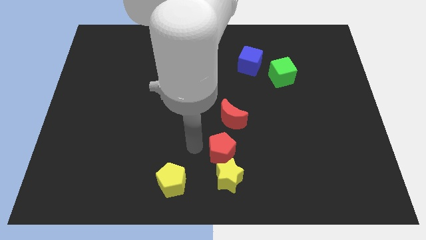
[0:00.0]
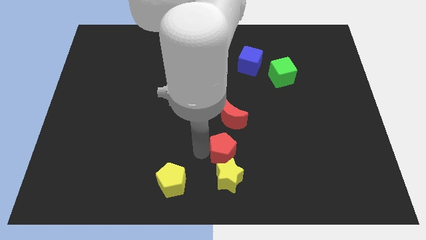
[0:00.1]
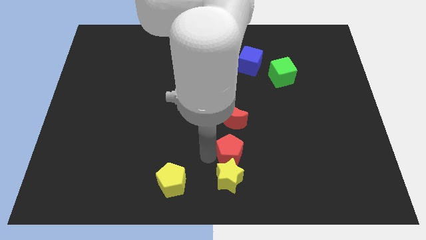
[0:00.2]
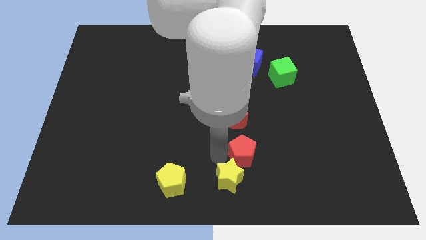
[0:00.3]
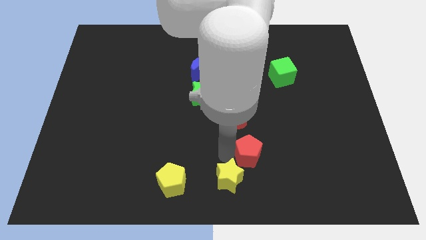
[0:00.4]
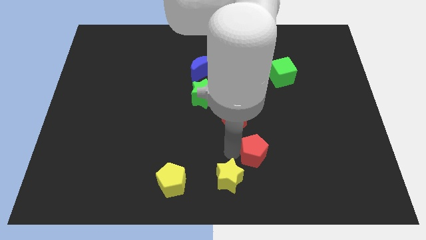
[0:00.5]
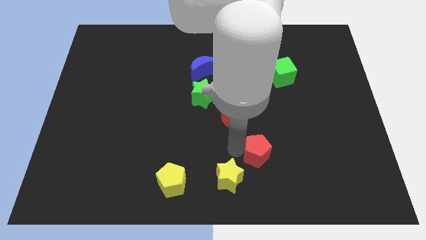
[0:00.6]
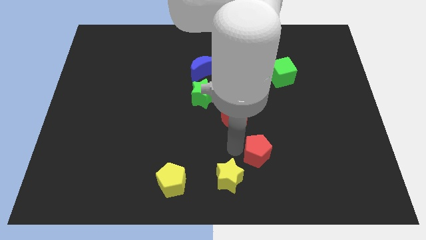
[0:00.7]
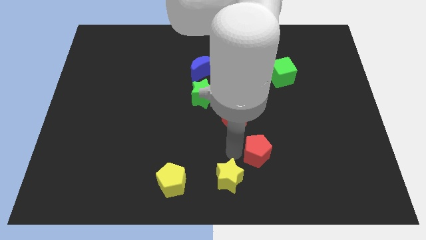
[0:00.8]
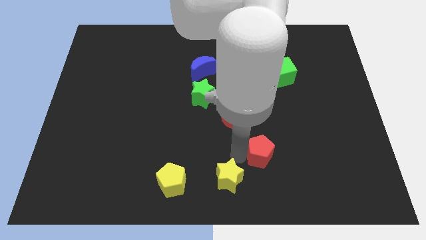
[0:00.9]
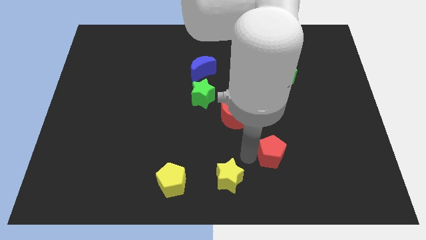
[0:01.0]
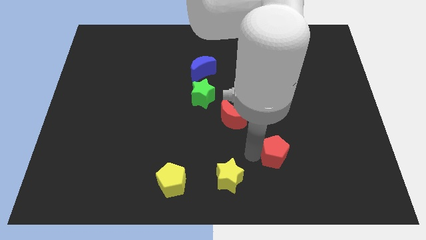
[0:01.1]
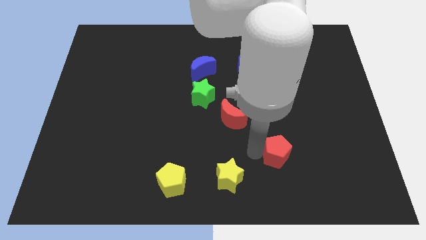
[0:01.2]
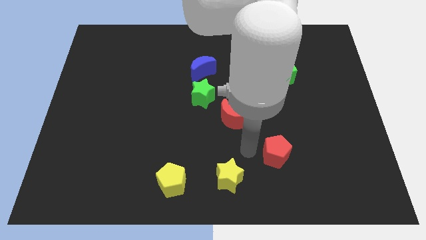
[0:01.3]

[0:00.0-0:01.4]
slightly push the red pentagon to the right

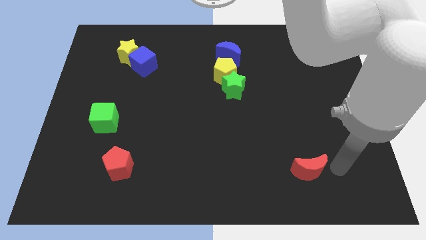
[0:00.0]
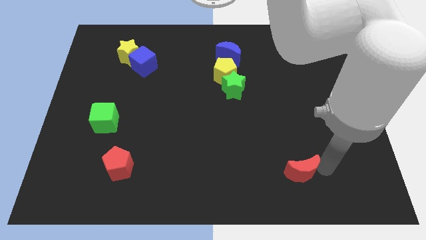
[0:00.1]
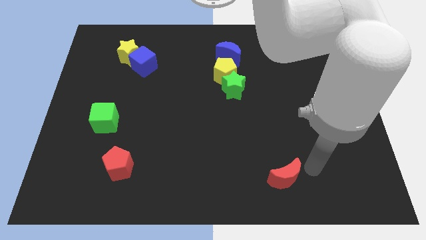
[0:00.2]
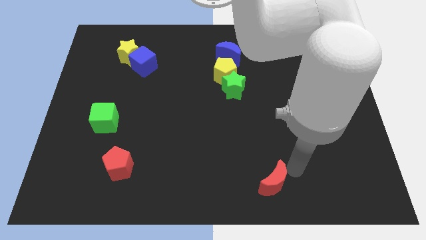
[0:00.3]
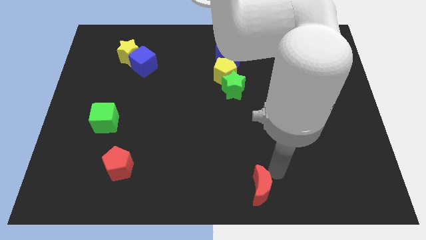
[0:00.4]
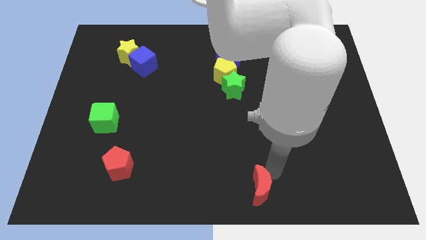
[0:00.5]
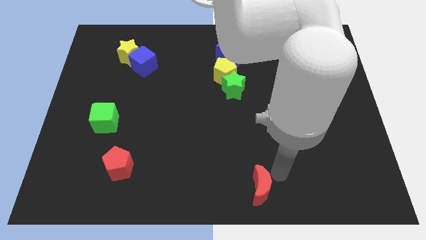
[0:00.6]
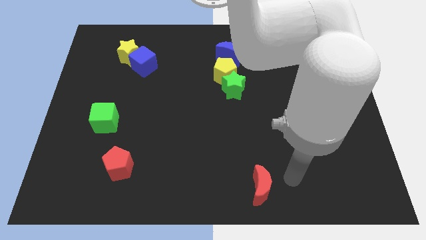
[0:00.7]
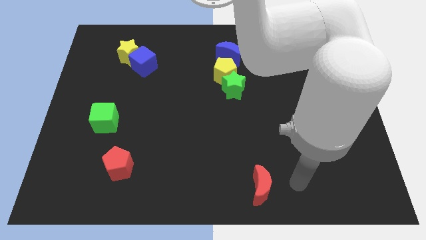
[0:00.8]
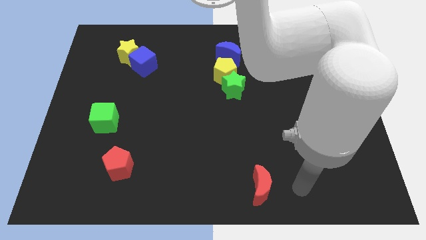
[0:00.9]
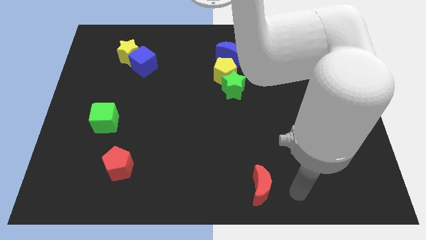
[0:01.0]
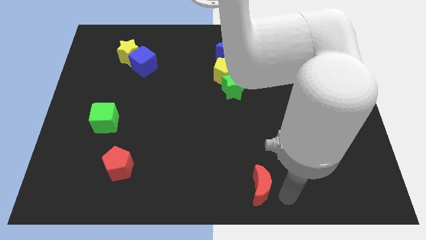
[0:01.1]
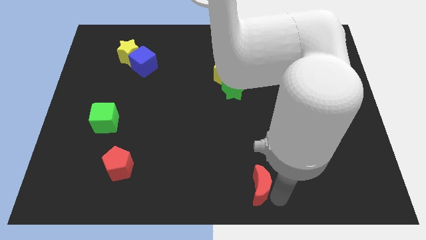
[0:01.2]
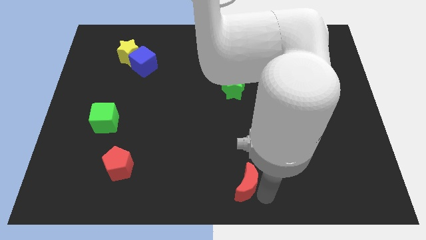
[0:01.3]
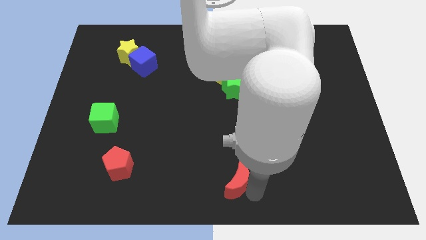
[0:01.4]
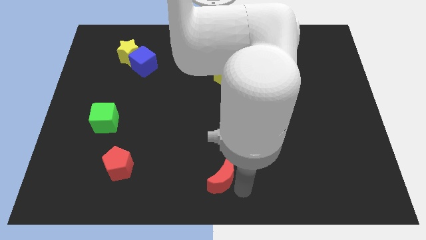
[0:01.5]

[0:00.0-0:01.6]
place the red moon at the bottom center of the board

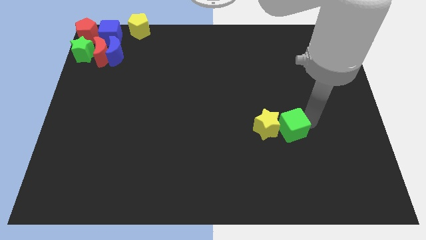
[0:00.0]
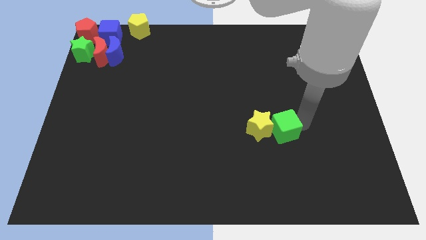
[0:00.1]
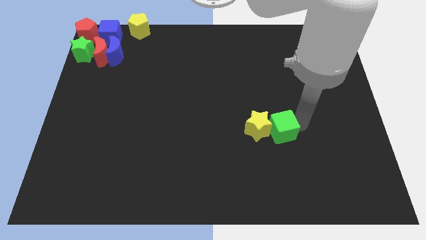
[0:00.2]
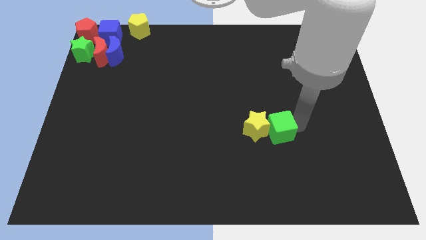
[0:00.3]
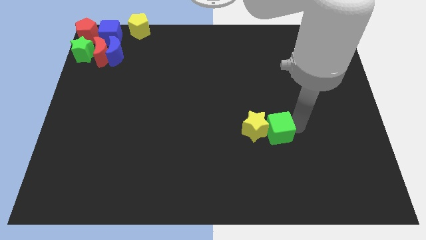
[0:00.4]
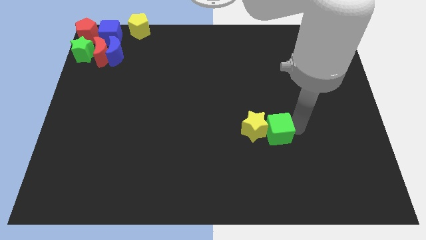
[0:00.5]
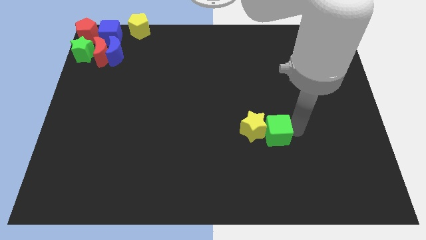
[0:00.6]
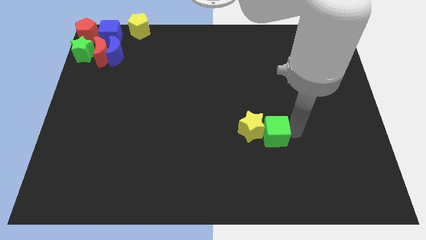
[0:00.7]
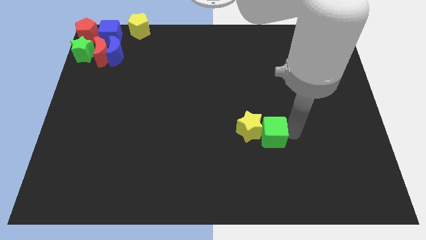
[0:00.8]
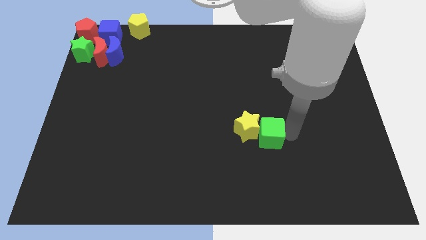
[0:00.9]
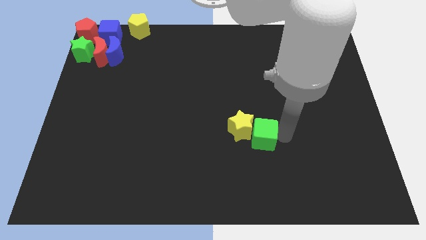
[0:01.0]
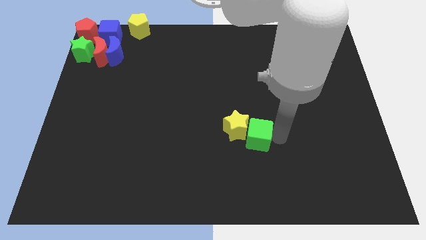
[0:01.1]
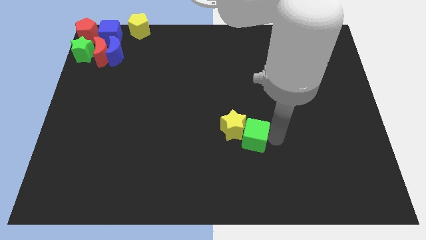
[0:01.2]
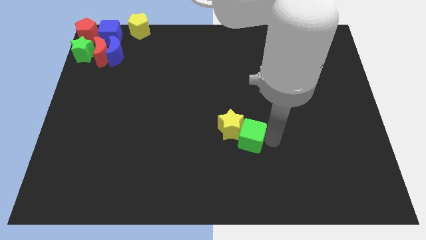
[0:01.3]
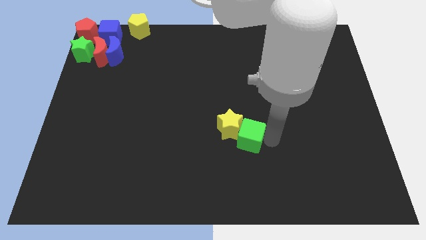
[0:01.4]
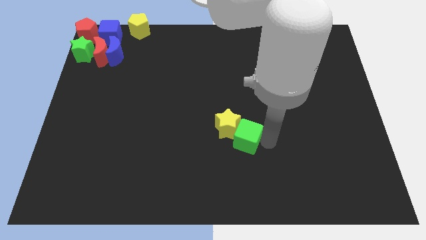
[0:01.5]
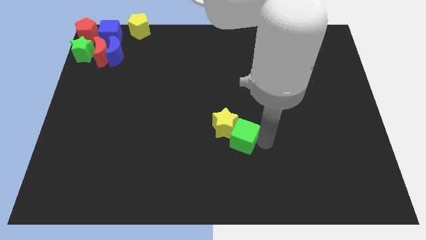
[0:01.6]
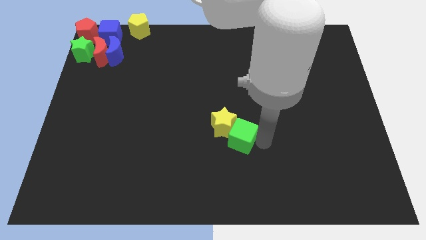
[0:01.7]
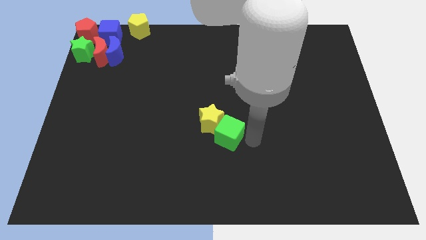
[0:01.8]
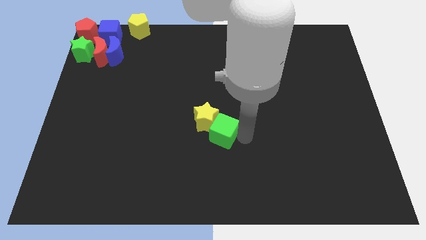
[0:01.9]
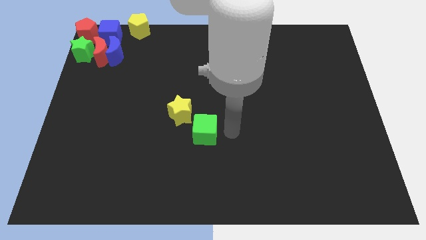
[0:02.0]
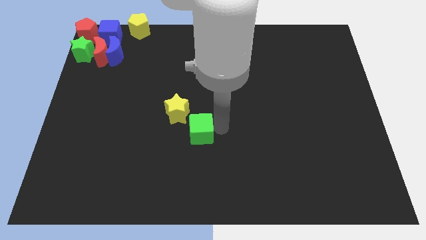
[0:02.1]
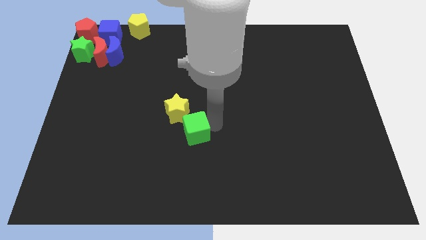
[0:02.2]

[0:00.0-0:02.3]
push the yellow star with the green cube

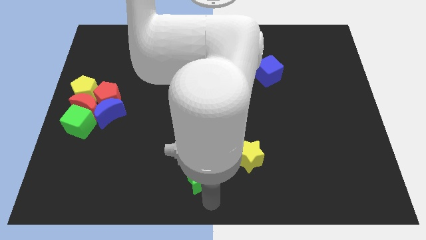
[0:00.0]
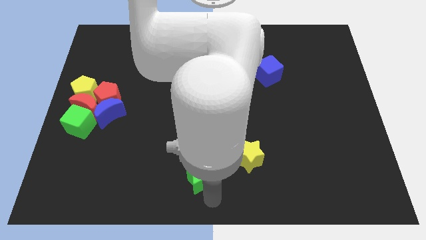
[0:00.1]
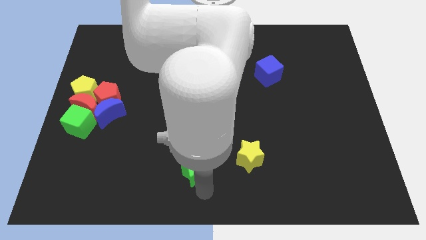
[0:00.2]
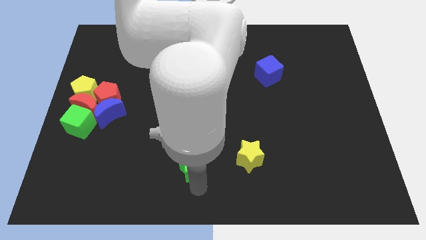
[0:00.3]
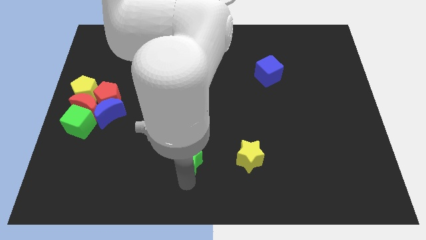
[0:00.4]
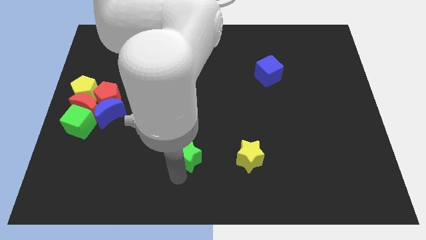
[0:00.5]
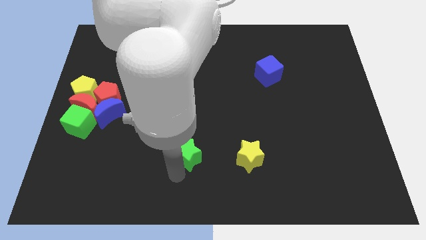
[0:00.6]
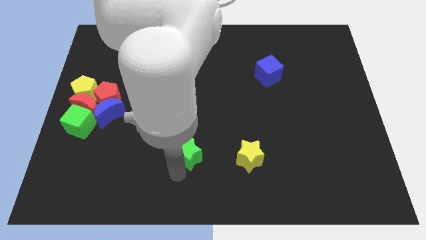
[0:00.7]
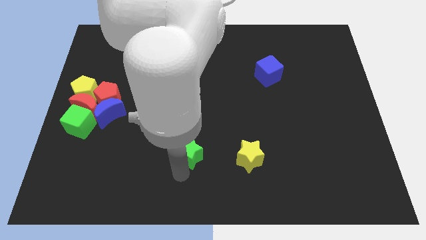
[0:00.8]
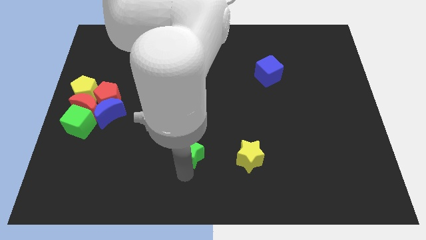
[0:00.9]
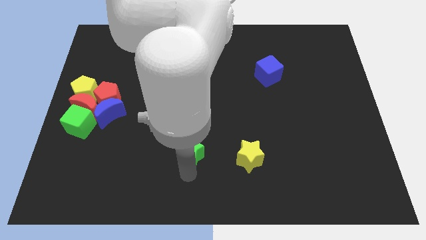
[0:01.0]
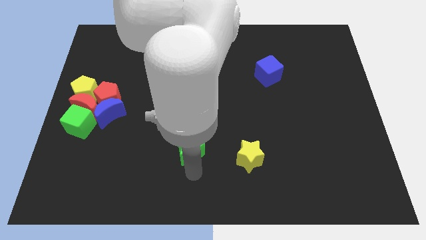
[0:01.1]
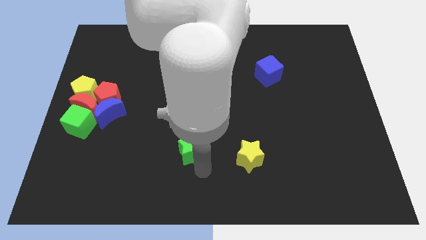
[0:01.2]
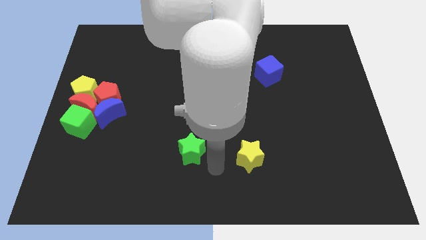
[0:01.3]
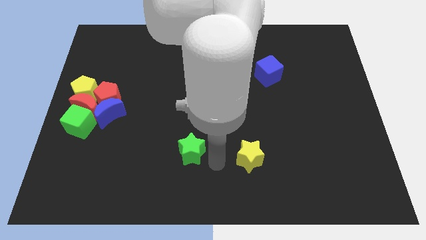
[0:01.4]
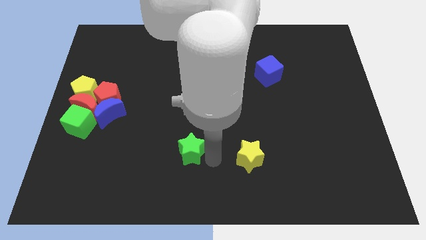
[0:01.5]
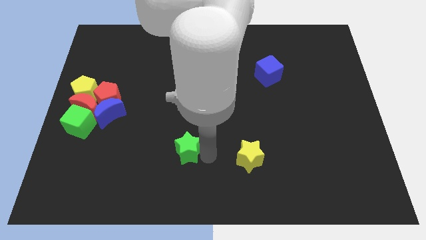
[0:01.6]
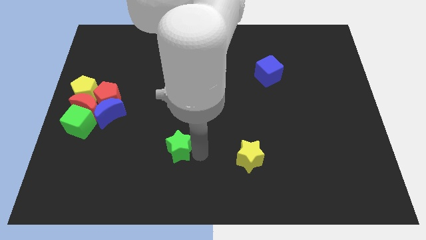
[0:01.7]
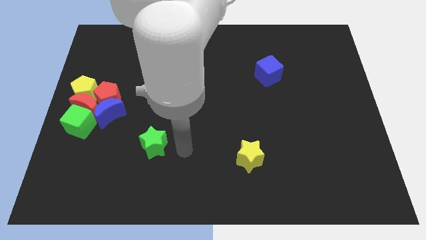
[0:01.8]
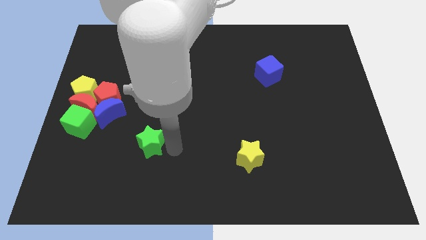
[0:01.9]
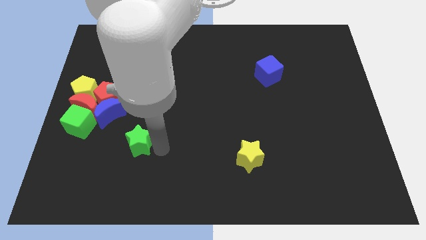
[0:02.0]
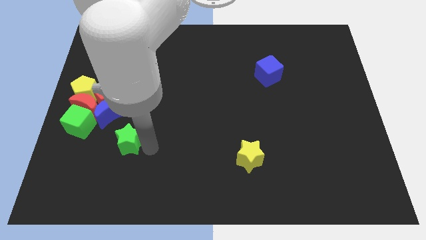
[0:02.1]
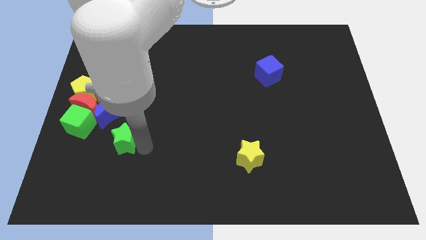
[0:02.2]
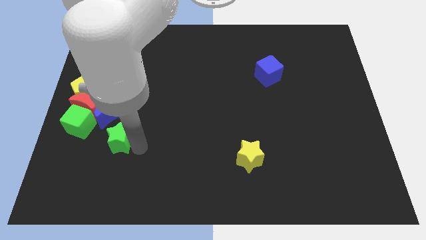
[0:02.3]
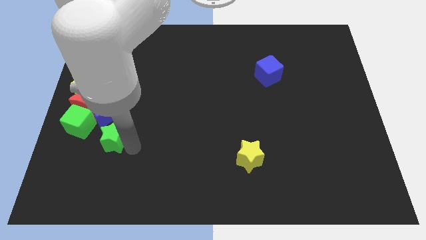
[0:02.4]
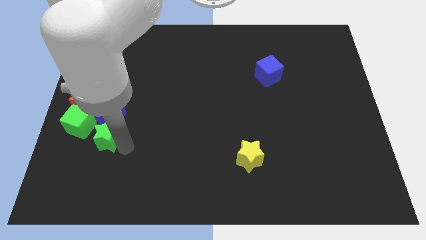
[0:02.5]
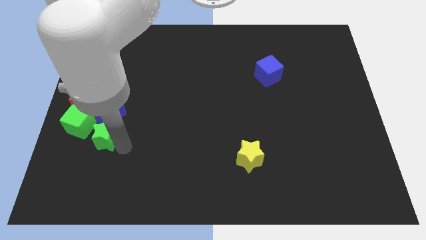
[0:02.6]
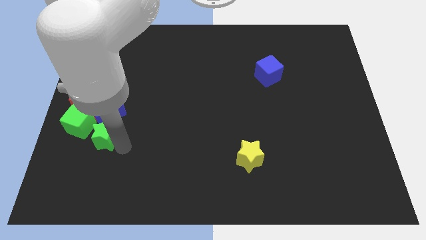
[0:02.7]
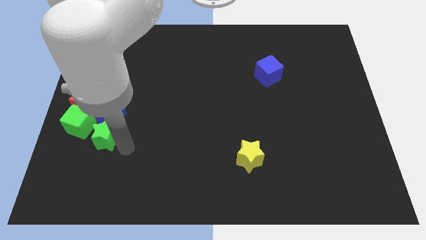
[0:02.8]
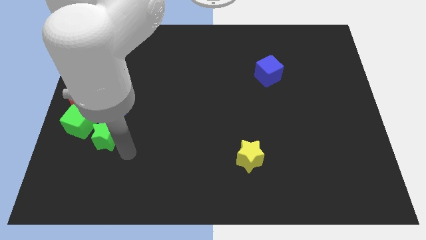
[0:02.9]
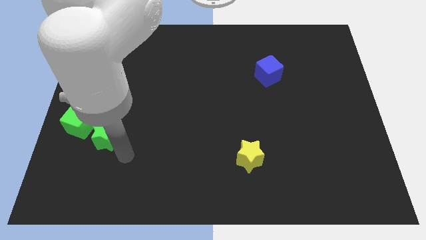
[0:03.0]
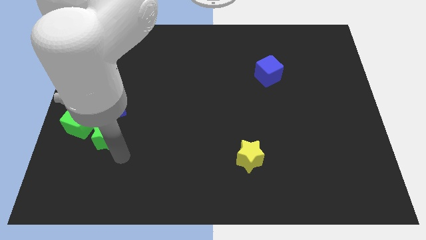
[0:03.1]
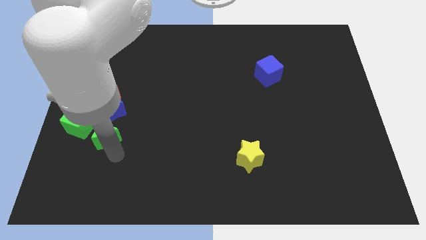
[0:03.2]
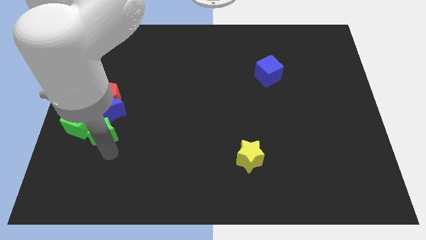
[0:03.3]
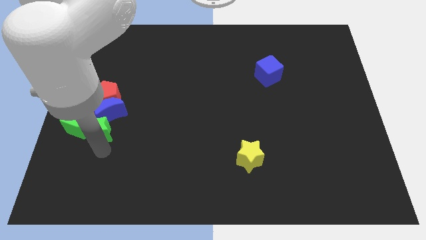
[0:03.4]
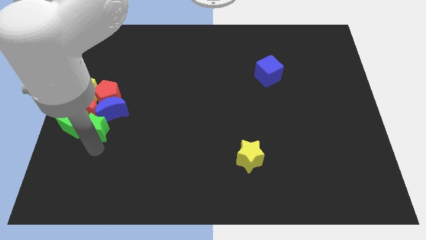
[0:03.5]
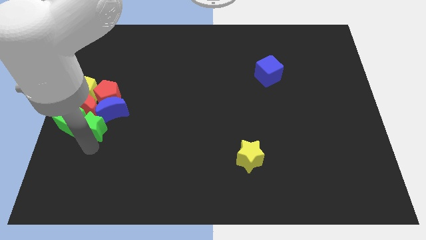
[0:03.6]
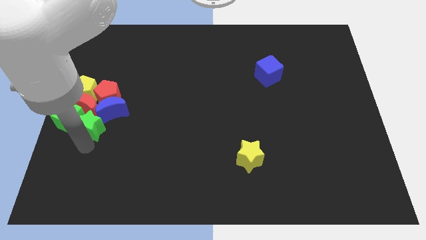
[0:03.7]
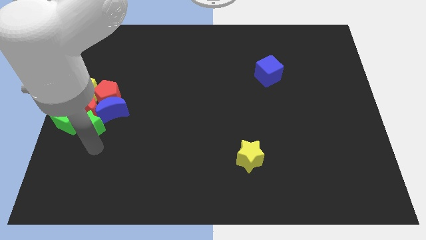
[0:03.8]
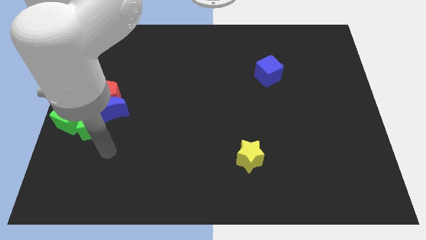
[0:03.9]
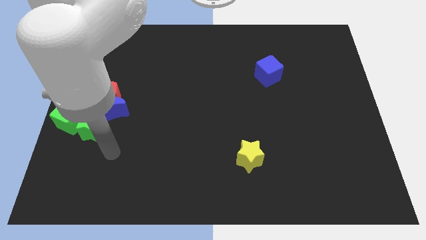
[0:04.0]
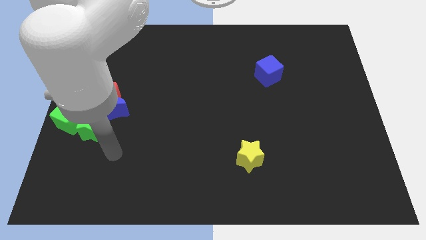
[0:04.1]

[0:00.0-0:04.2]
move the green star to the group of blocks
